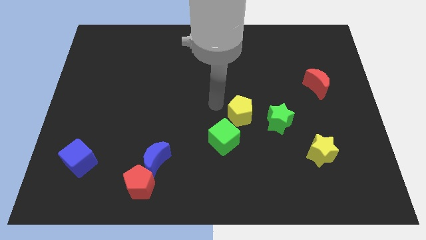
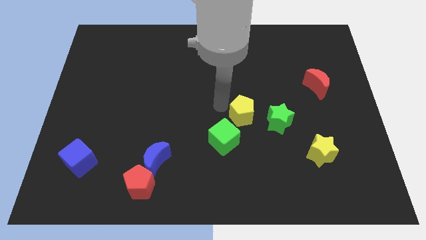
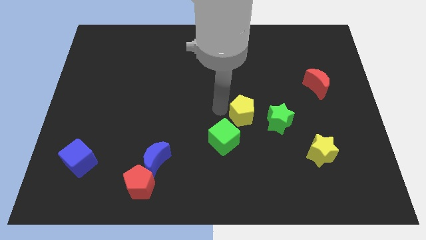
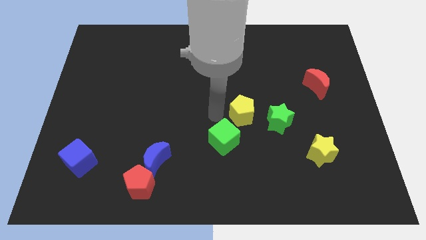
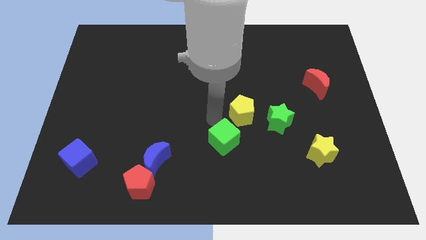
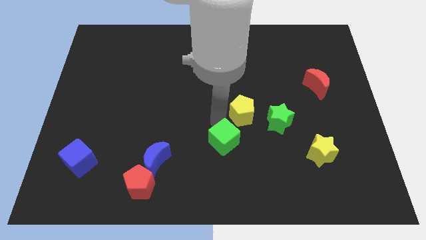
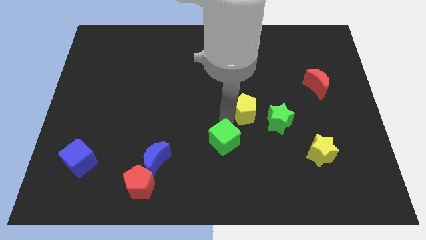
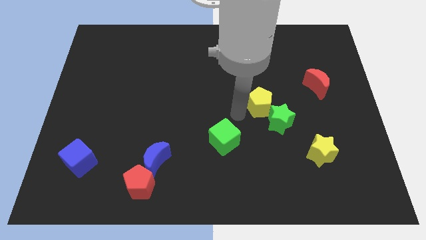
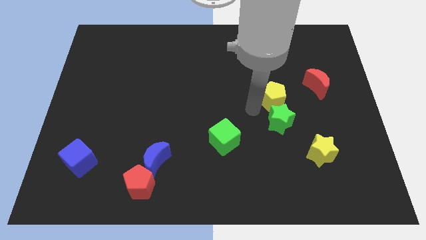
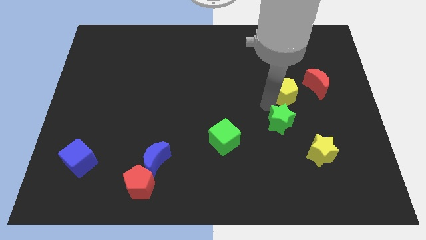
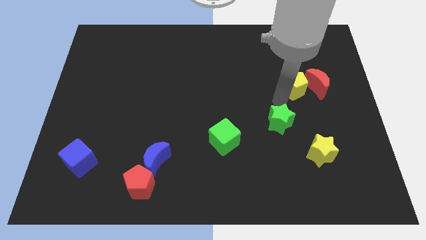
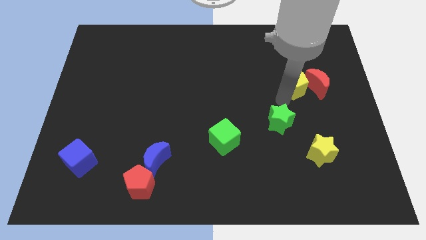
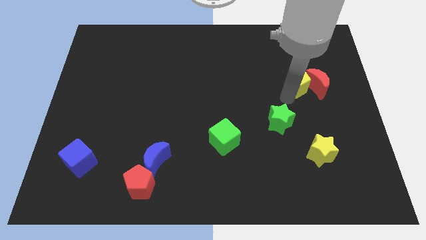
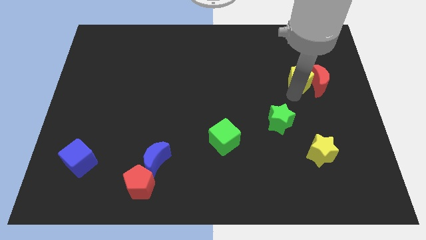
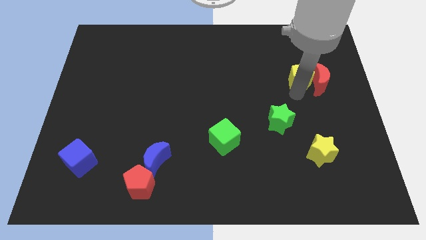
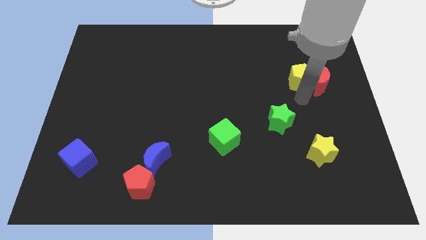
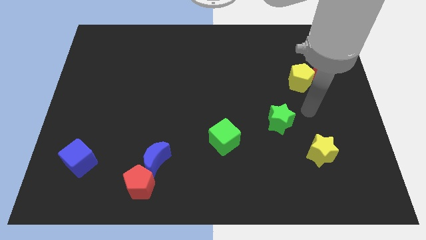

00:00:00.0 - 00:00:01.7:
push the yellow pentagon into red crescent

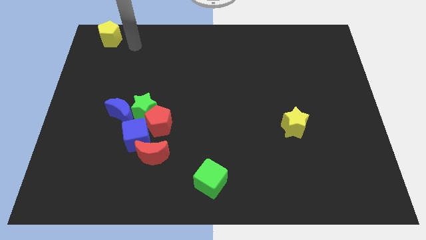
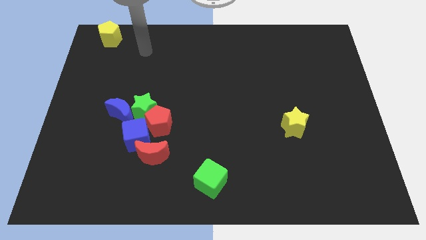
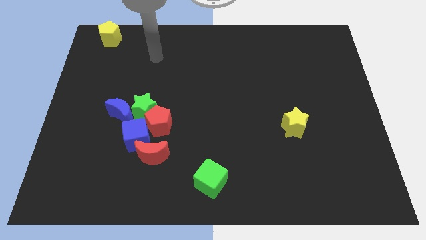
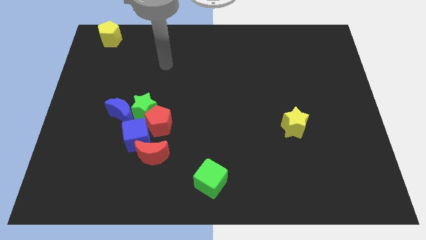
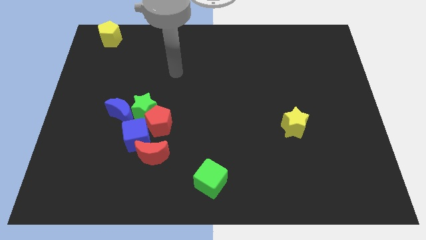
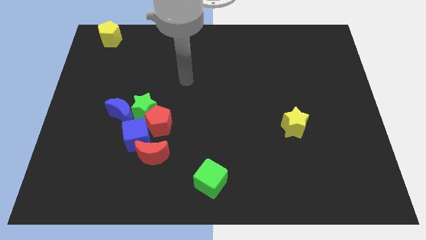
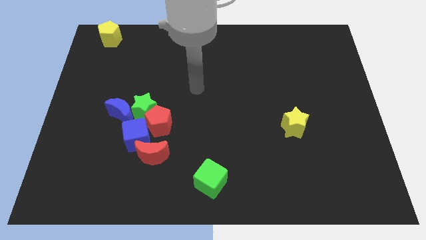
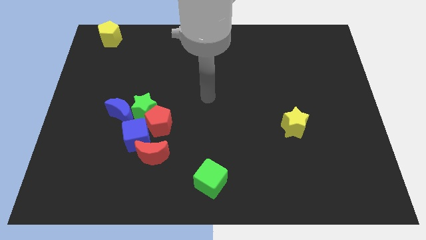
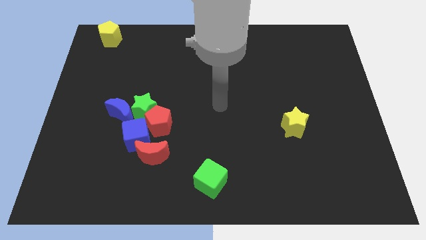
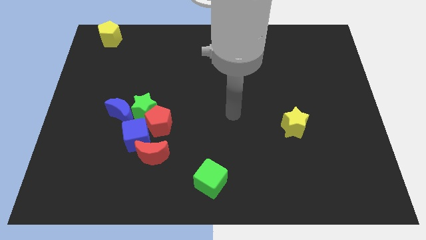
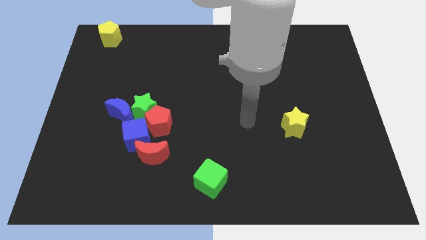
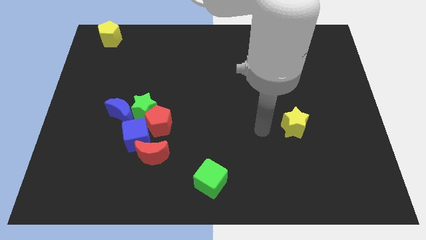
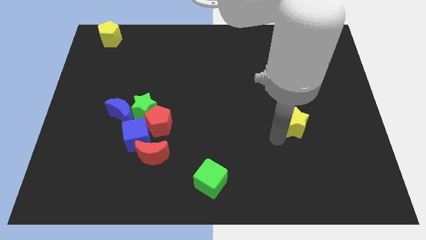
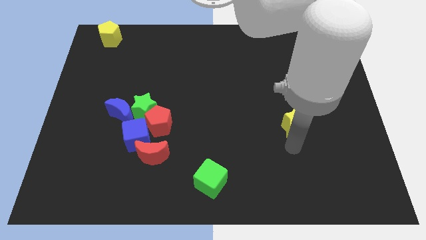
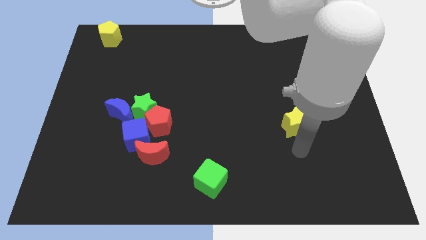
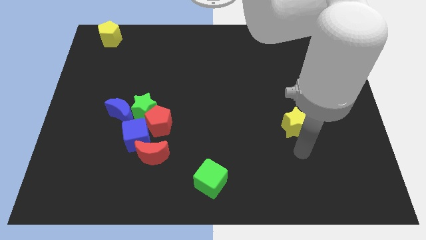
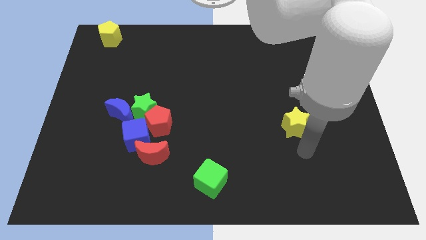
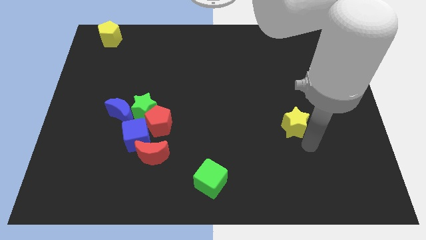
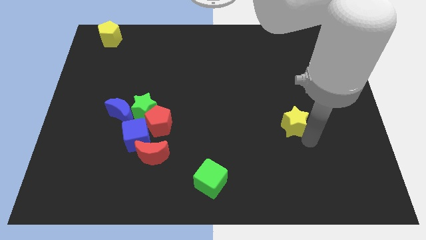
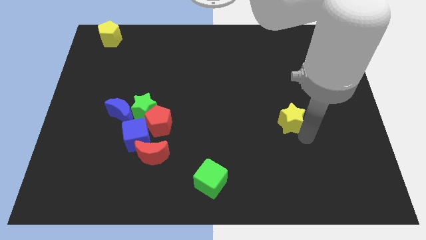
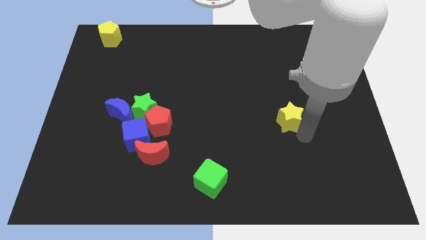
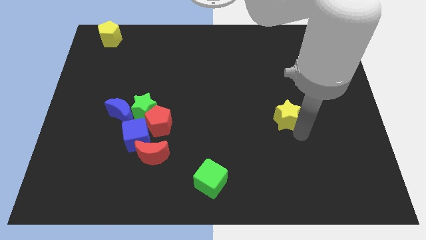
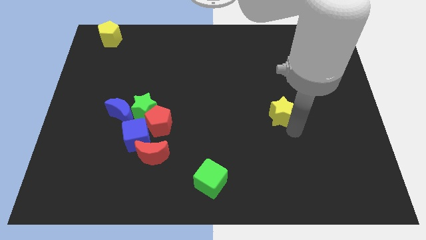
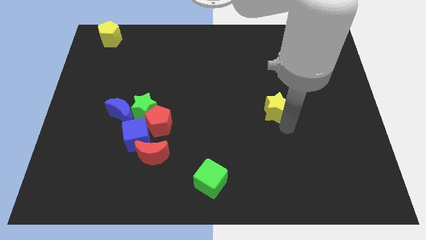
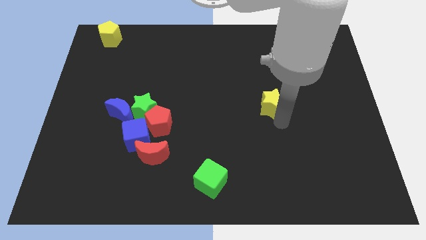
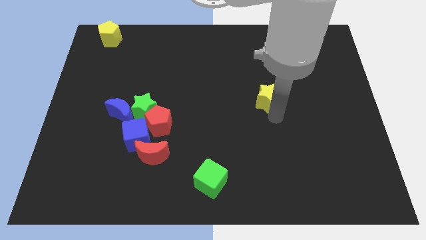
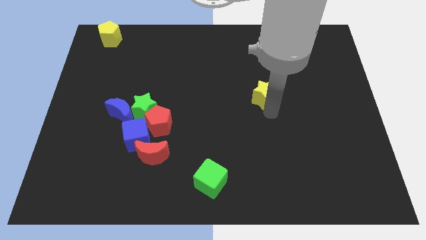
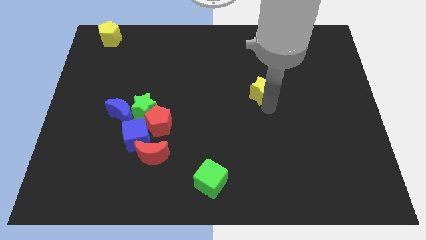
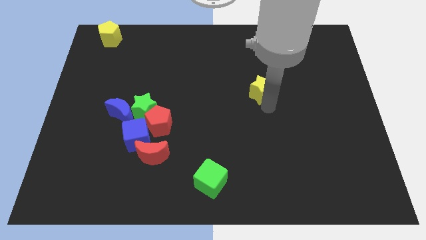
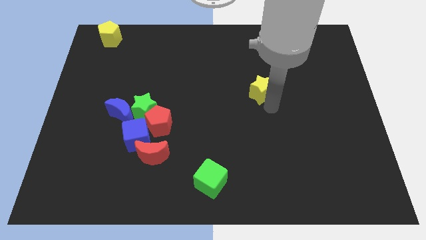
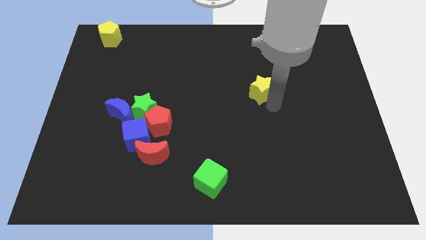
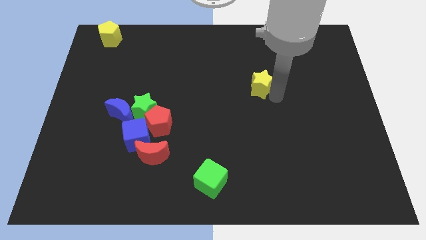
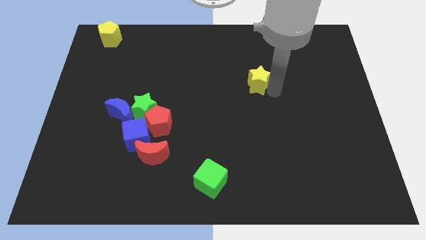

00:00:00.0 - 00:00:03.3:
move the yellow star towards the center of the board

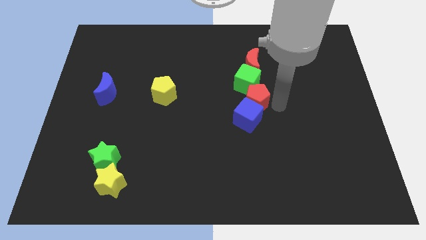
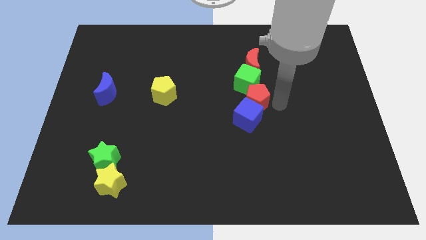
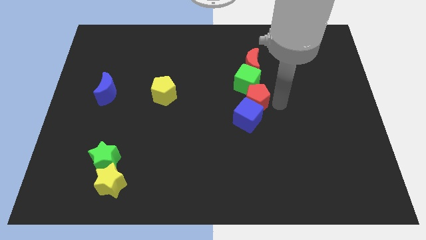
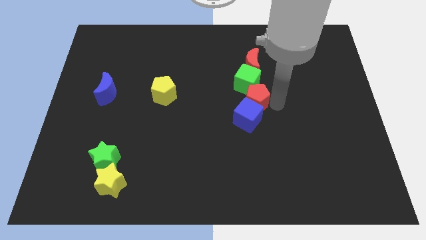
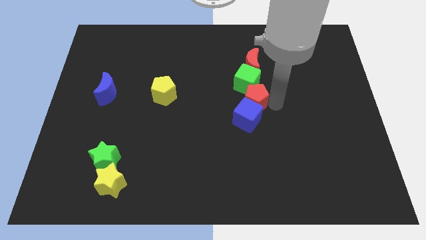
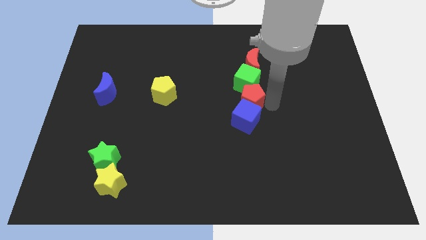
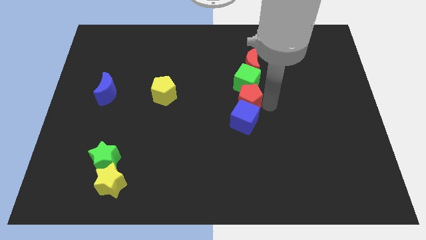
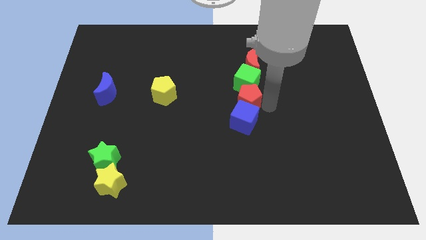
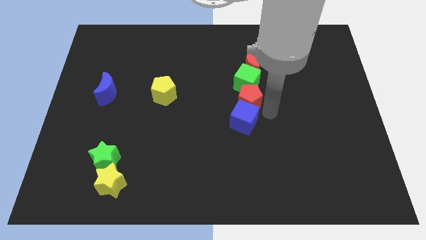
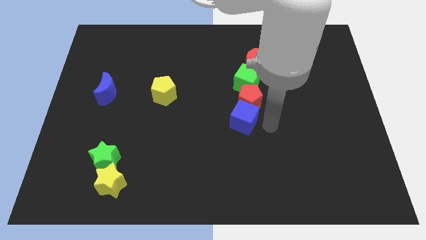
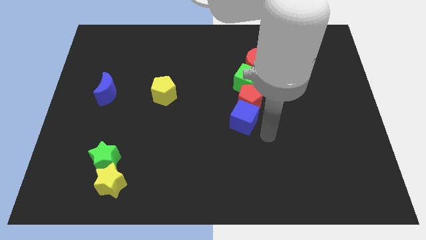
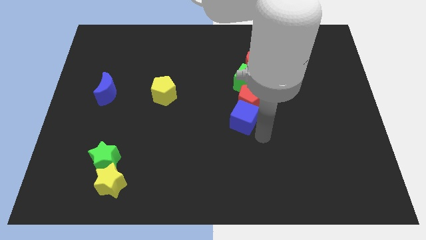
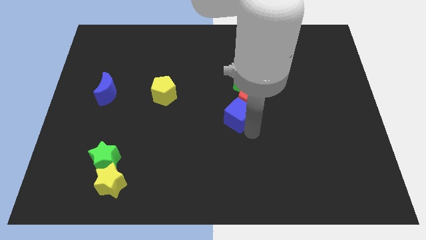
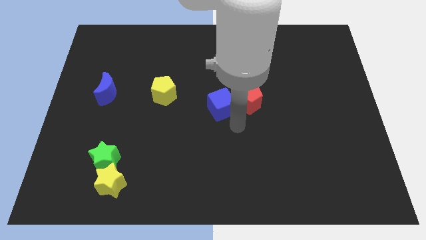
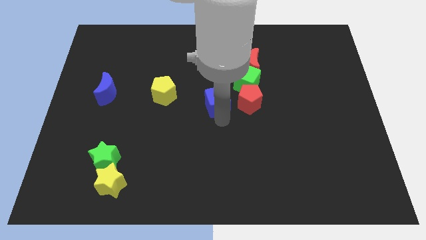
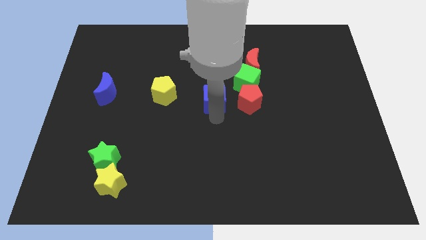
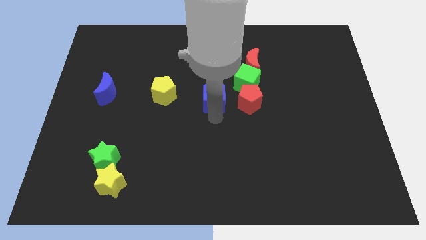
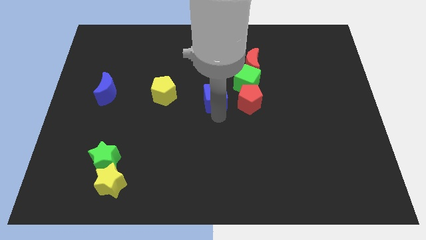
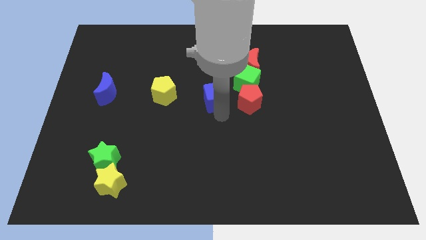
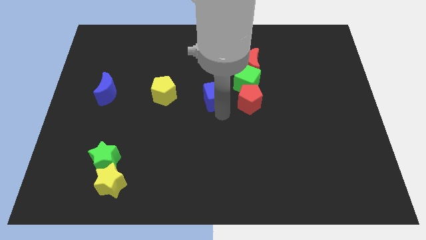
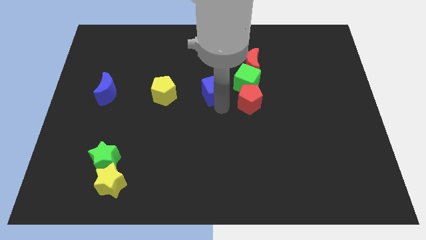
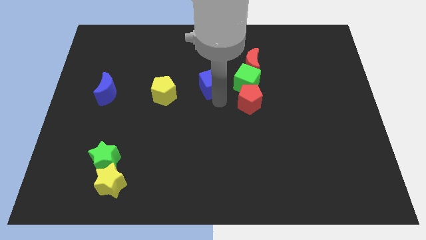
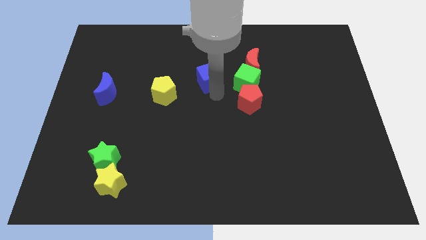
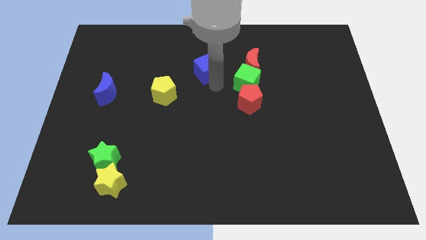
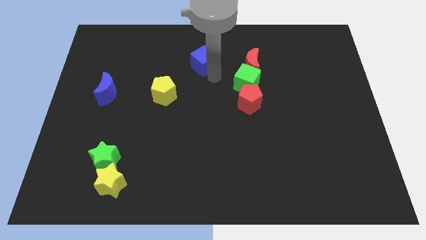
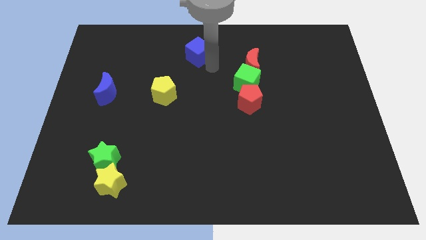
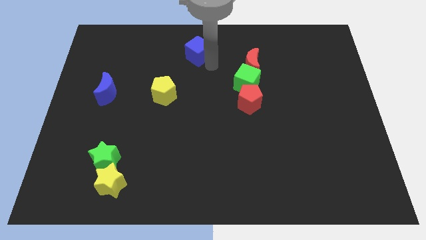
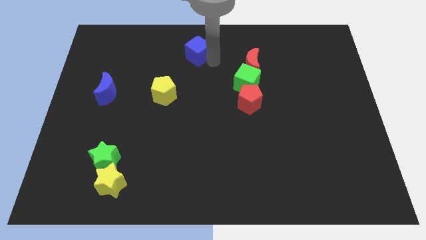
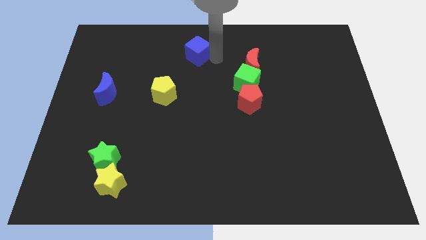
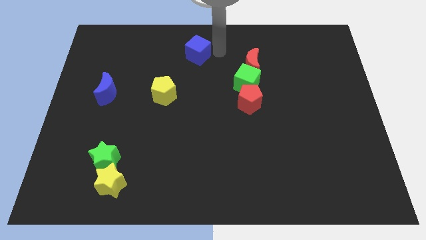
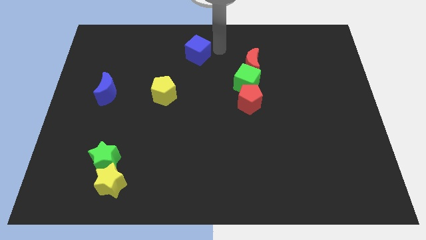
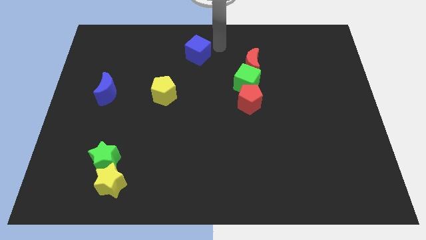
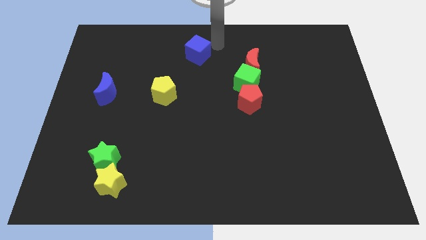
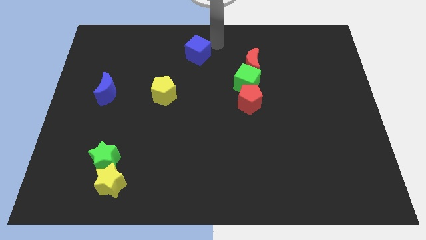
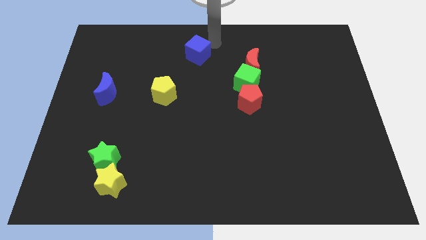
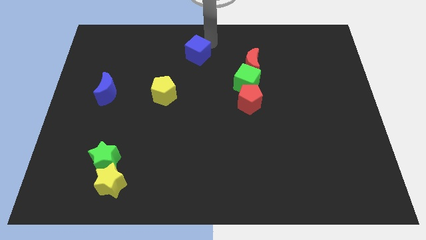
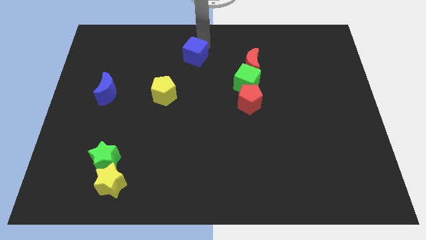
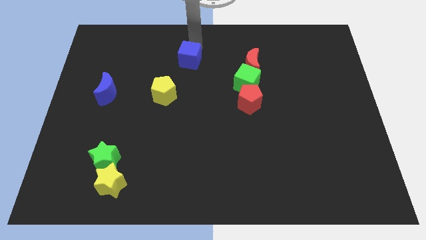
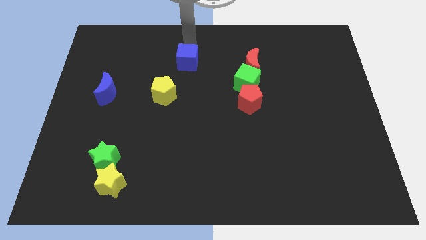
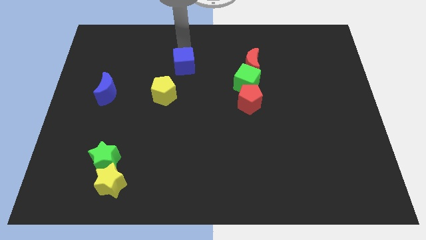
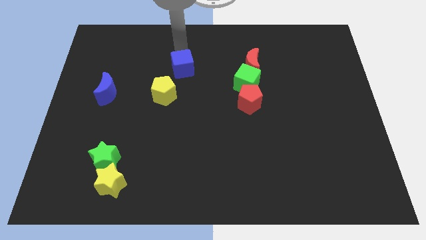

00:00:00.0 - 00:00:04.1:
place the blue cube above the yellow pentagon
